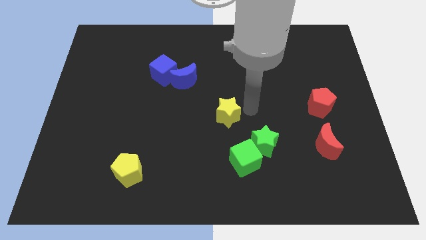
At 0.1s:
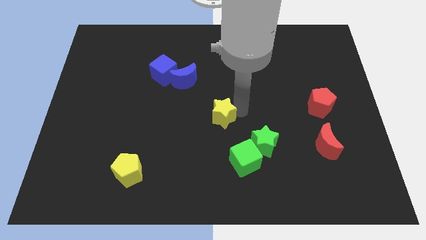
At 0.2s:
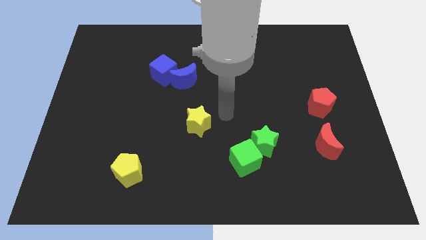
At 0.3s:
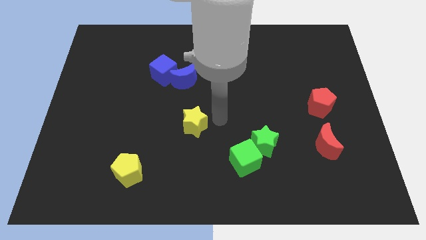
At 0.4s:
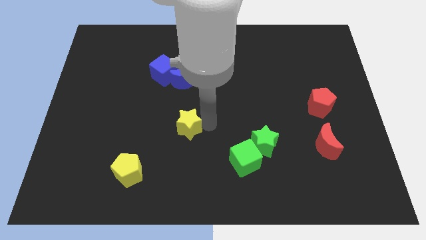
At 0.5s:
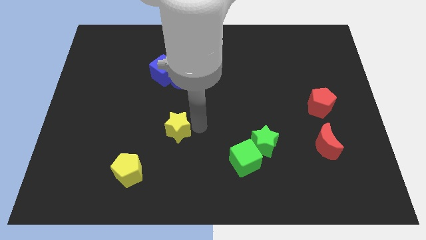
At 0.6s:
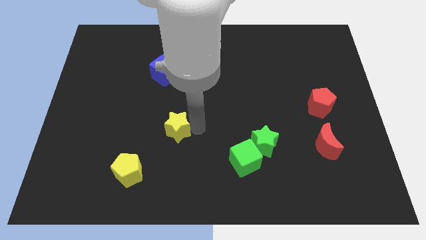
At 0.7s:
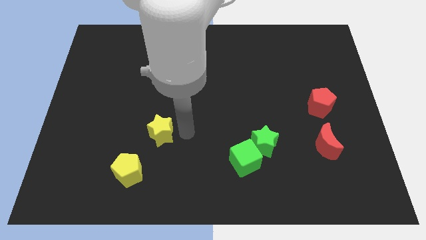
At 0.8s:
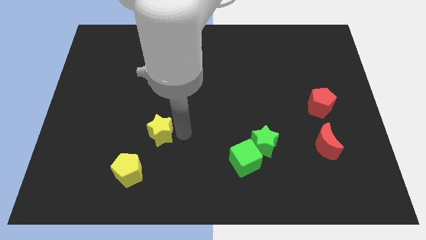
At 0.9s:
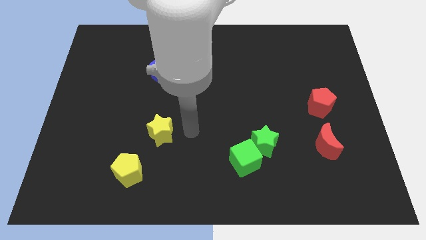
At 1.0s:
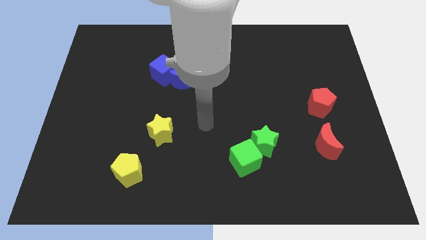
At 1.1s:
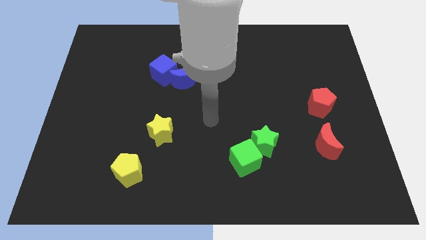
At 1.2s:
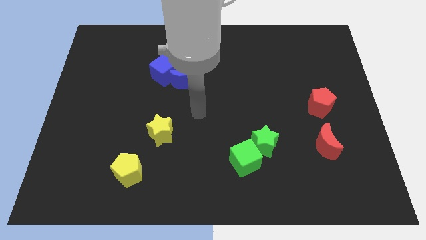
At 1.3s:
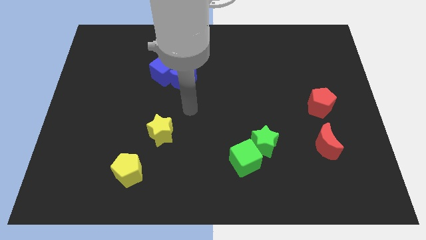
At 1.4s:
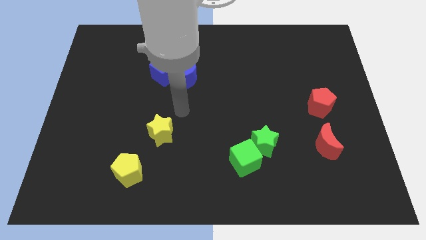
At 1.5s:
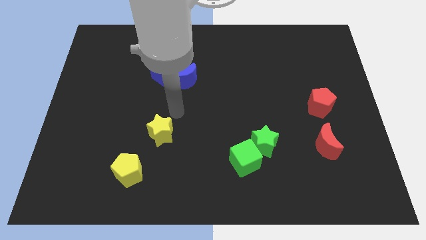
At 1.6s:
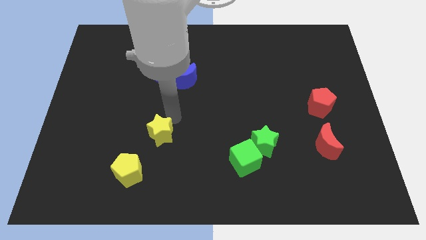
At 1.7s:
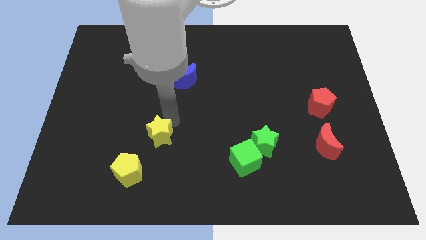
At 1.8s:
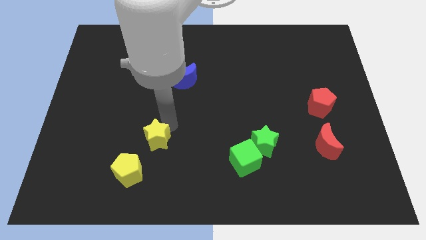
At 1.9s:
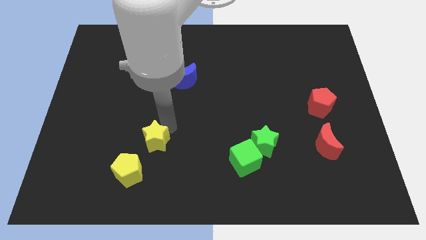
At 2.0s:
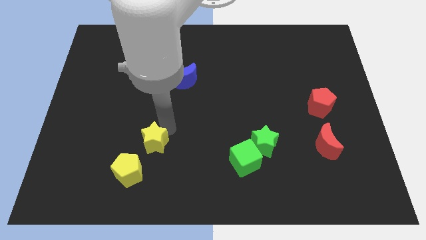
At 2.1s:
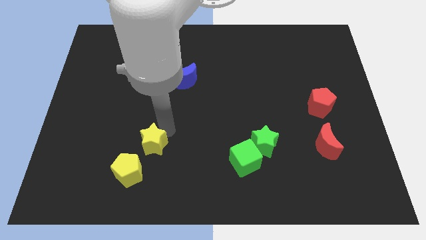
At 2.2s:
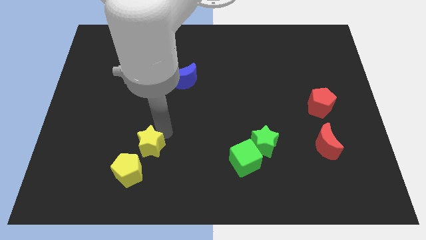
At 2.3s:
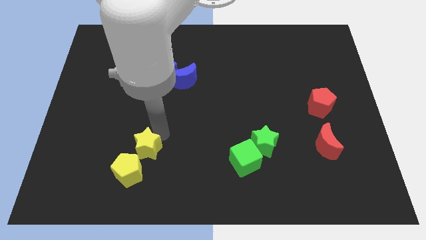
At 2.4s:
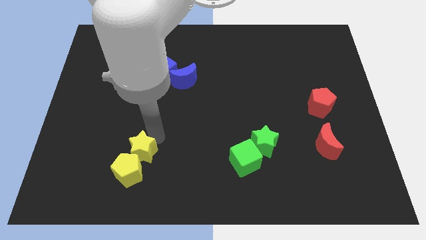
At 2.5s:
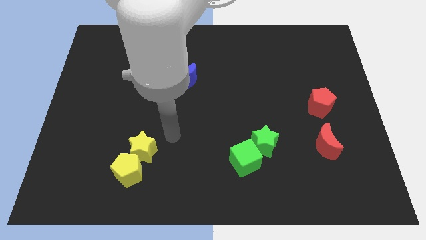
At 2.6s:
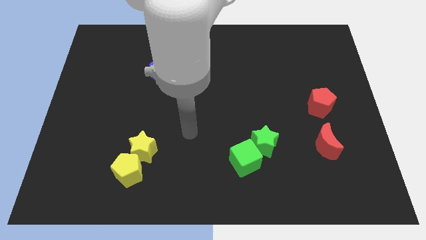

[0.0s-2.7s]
move the yellow star to the top right side of the yellow pentagon

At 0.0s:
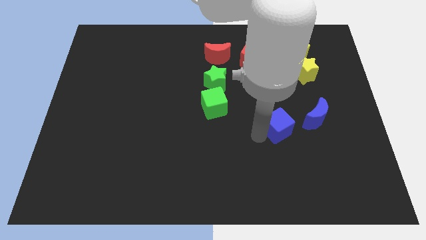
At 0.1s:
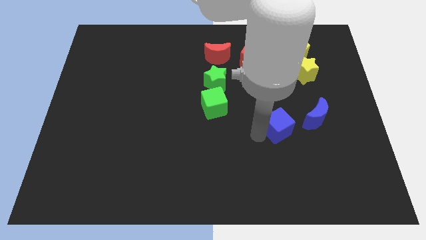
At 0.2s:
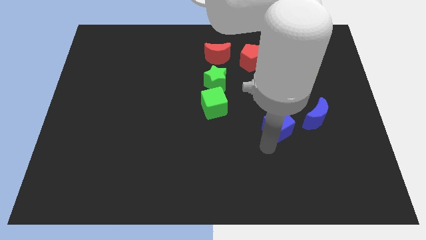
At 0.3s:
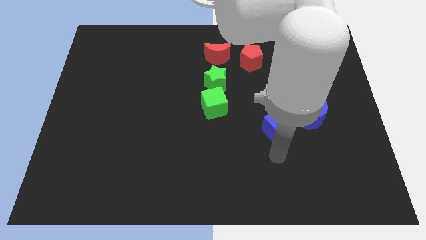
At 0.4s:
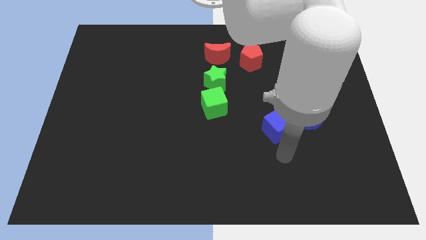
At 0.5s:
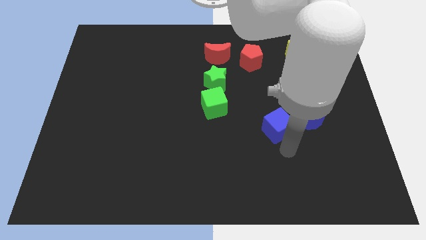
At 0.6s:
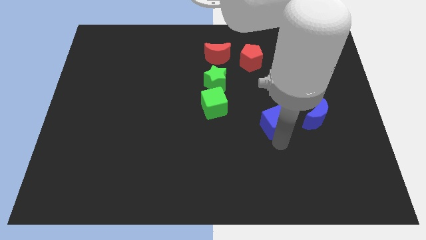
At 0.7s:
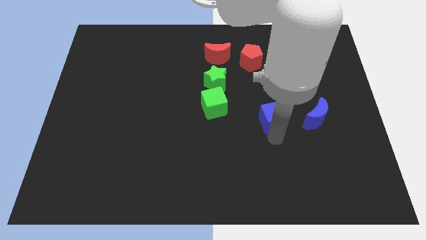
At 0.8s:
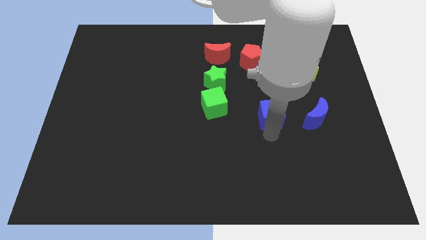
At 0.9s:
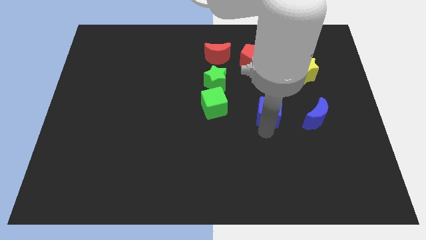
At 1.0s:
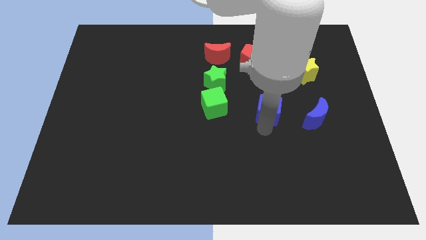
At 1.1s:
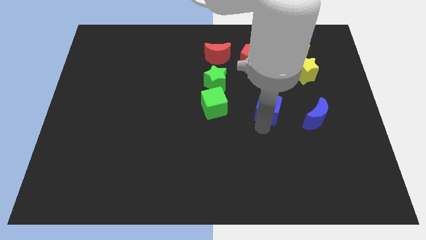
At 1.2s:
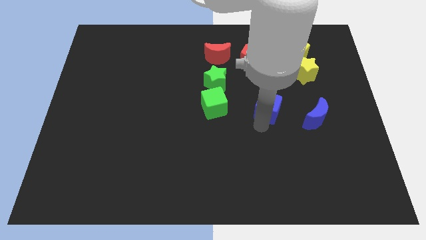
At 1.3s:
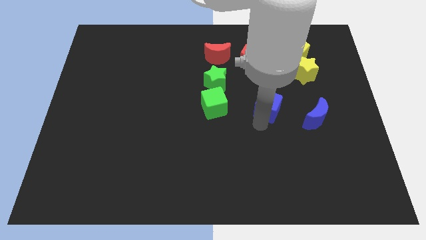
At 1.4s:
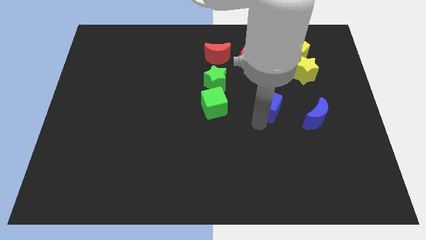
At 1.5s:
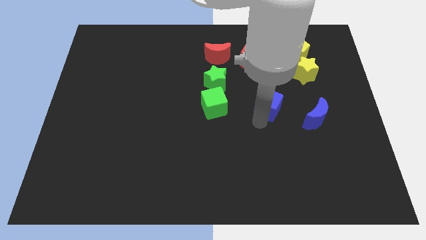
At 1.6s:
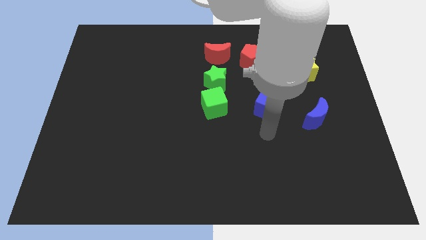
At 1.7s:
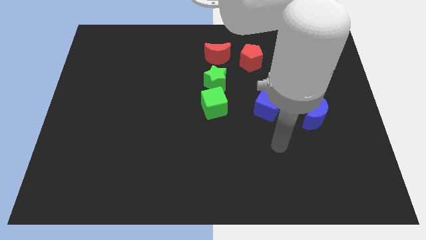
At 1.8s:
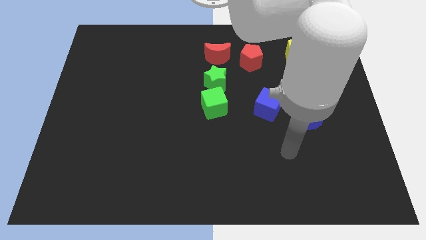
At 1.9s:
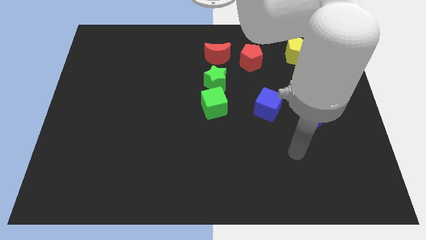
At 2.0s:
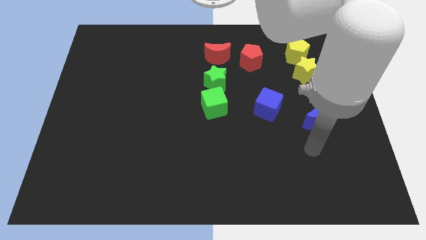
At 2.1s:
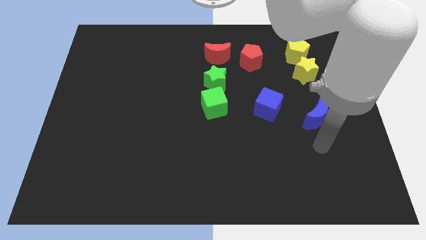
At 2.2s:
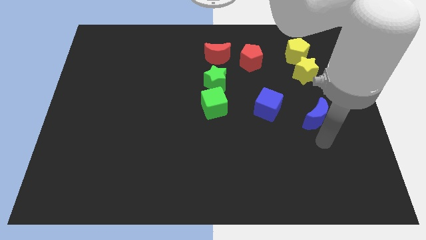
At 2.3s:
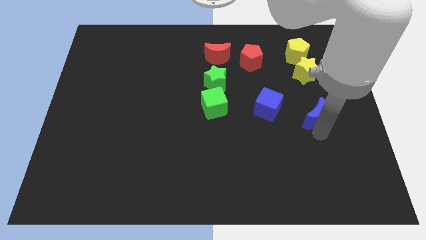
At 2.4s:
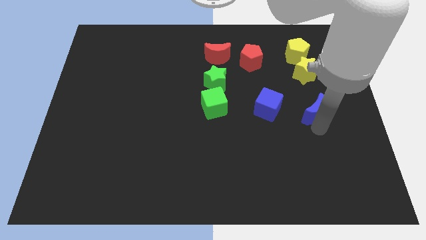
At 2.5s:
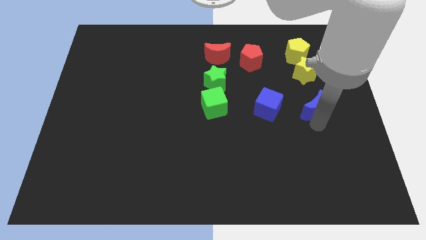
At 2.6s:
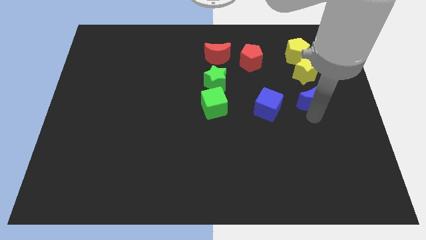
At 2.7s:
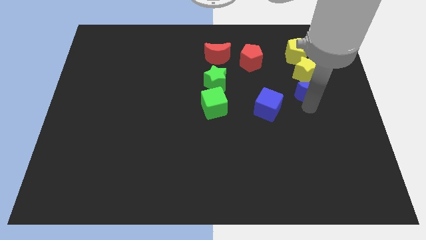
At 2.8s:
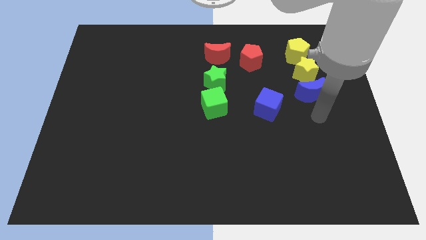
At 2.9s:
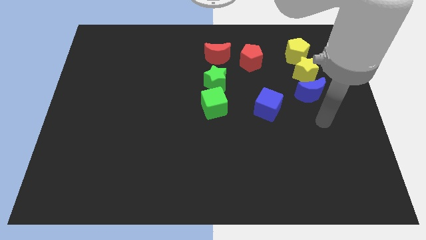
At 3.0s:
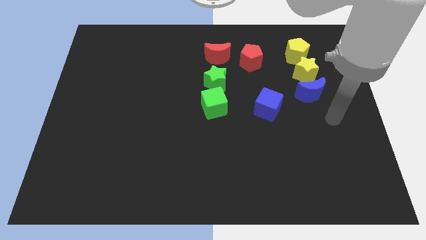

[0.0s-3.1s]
move the blue moon to the bottom side of the yellow star

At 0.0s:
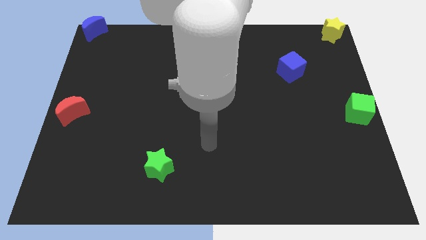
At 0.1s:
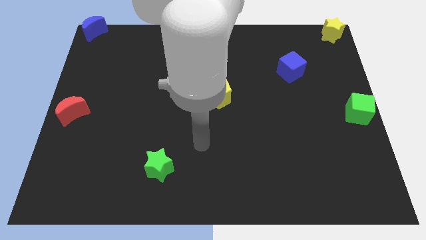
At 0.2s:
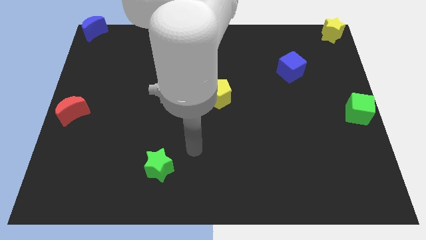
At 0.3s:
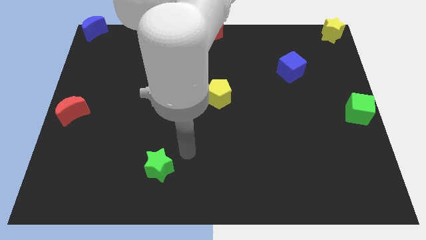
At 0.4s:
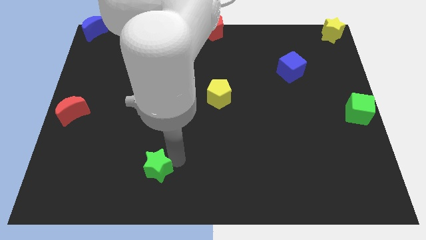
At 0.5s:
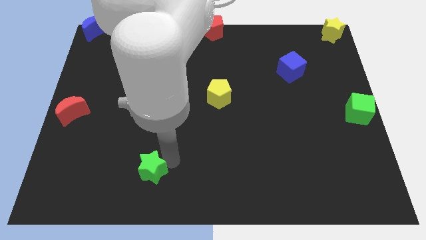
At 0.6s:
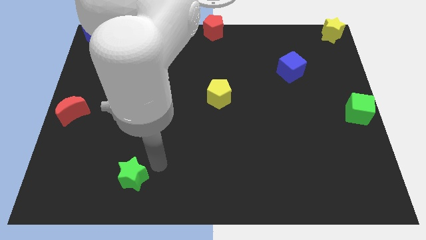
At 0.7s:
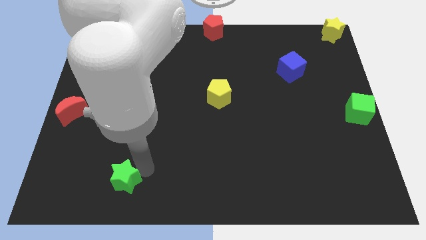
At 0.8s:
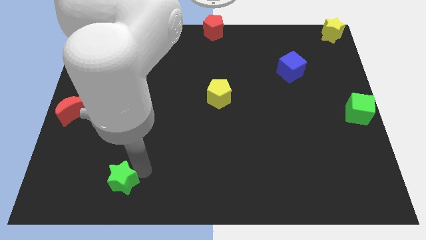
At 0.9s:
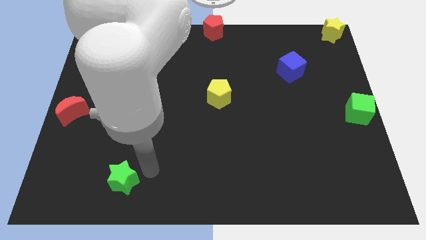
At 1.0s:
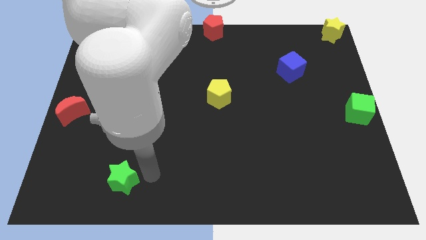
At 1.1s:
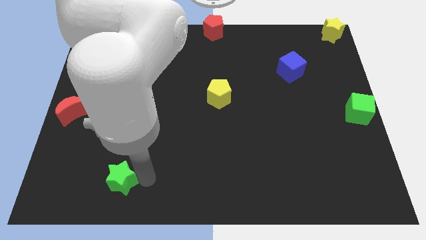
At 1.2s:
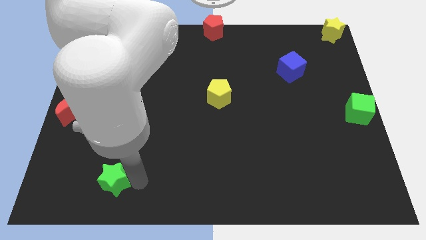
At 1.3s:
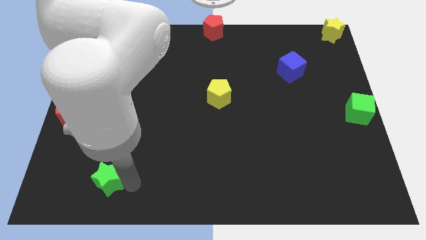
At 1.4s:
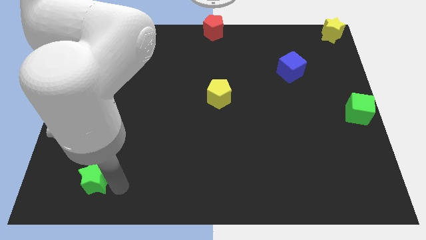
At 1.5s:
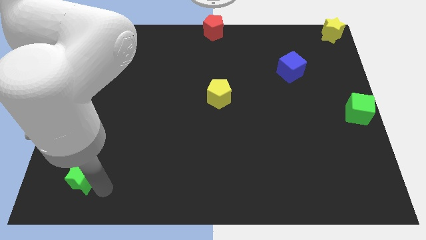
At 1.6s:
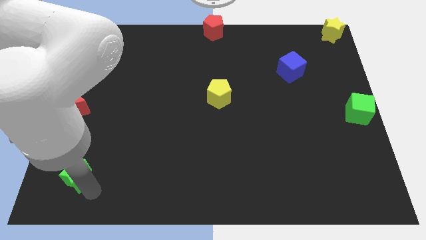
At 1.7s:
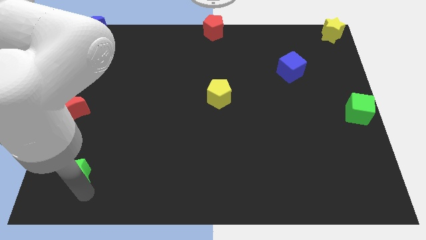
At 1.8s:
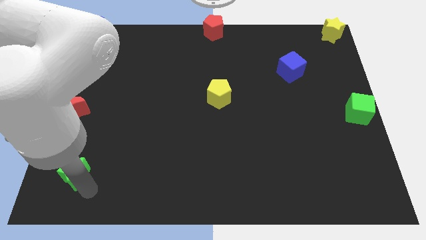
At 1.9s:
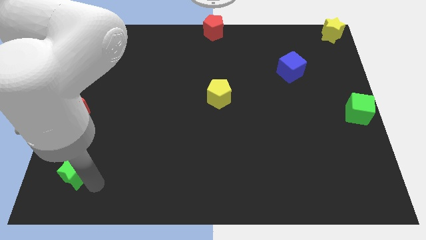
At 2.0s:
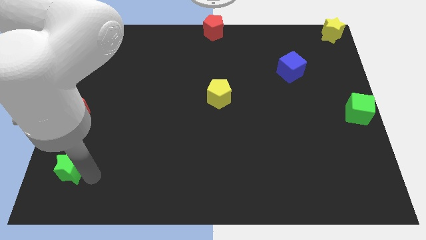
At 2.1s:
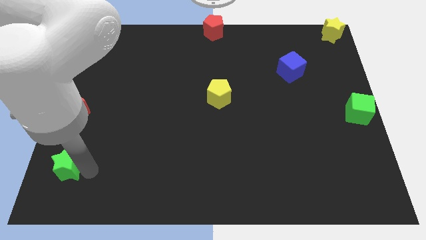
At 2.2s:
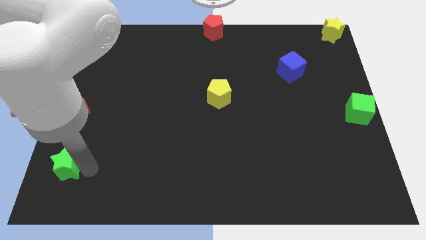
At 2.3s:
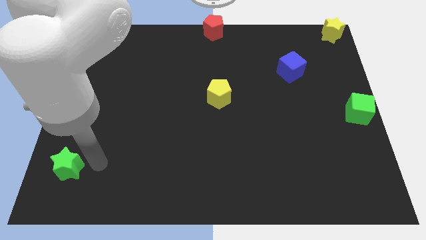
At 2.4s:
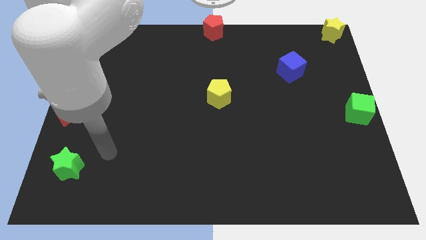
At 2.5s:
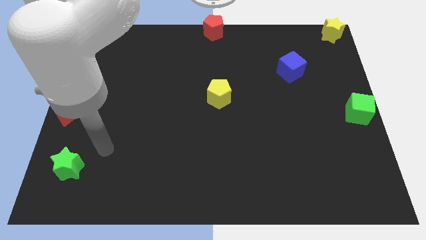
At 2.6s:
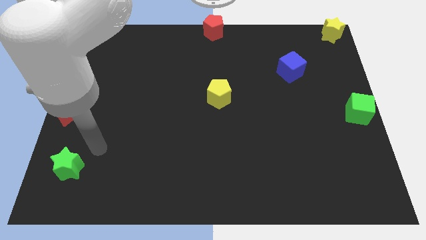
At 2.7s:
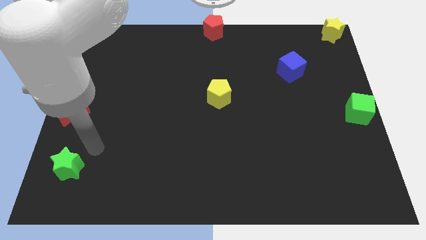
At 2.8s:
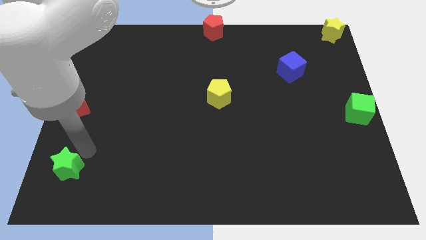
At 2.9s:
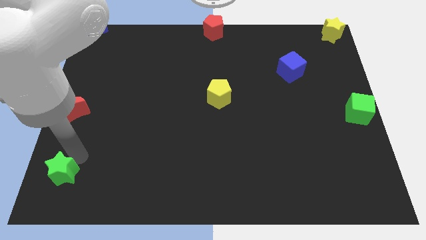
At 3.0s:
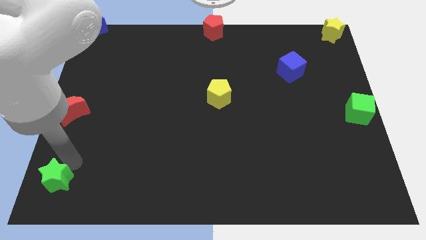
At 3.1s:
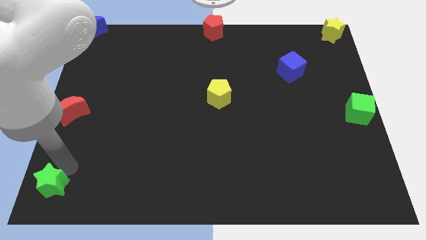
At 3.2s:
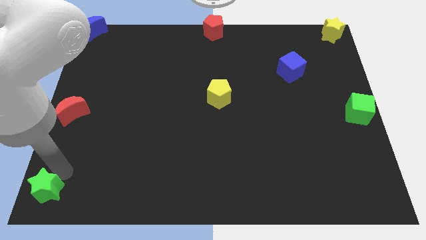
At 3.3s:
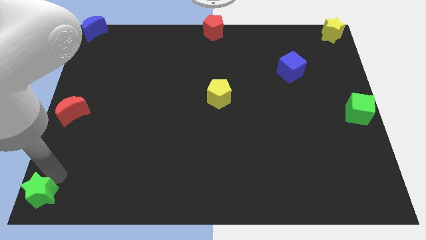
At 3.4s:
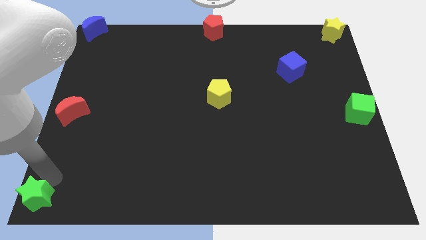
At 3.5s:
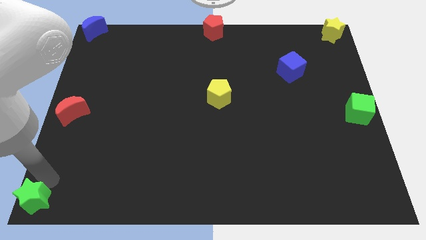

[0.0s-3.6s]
move the green star to the bottom left to the board
